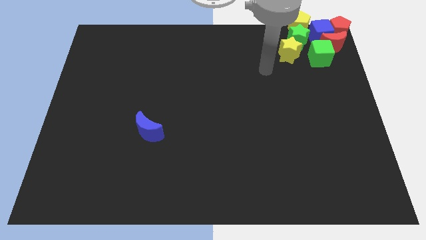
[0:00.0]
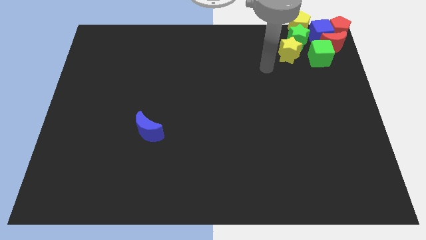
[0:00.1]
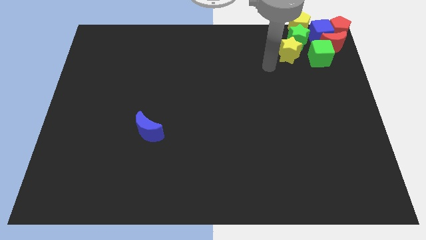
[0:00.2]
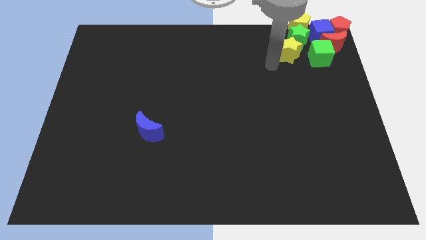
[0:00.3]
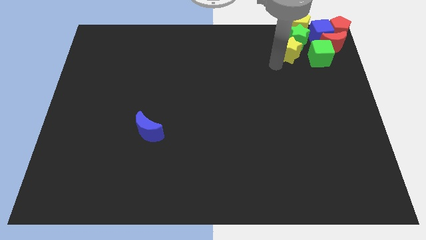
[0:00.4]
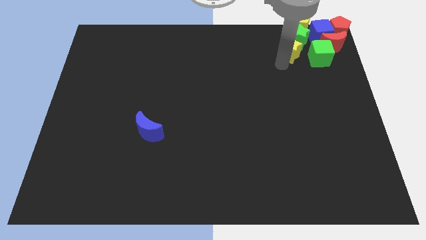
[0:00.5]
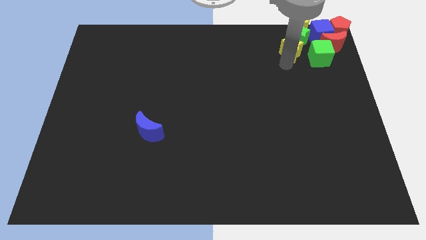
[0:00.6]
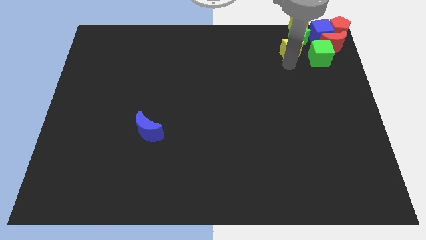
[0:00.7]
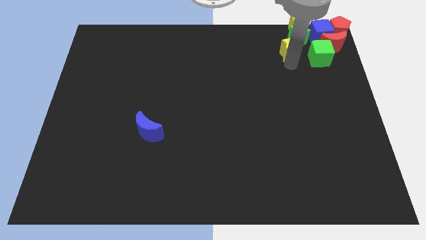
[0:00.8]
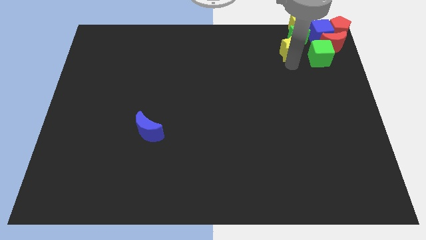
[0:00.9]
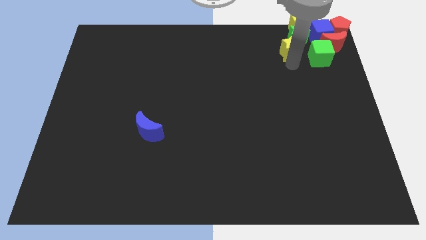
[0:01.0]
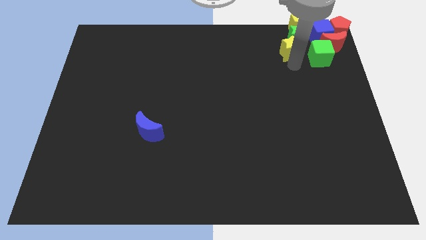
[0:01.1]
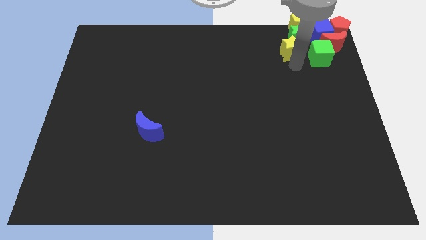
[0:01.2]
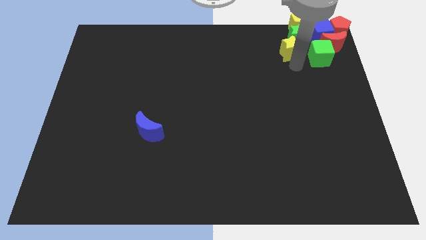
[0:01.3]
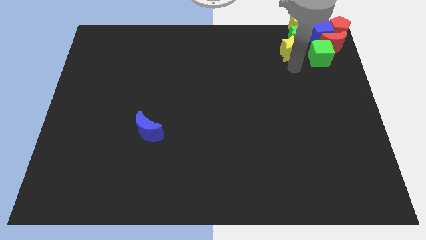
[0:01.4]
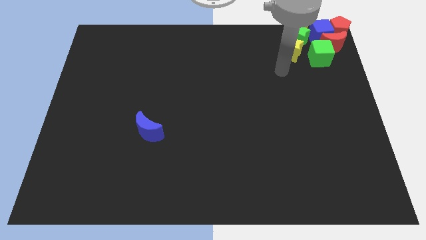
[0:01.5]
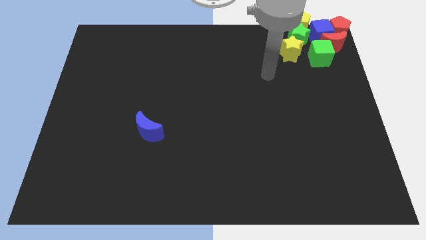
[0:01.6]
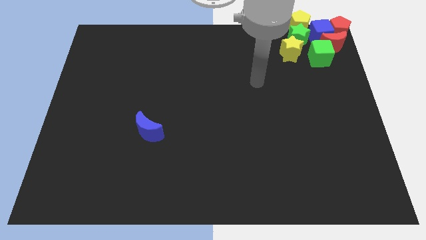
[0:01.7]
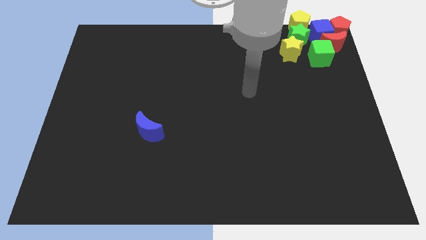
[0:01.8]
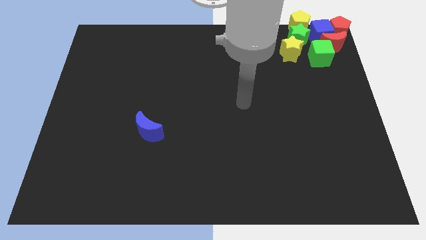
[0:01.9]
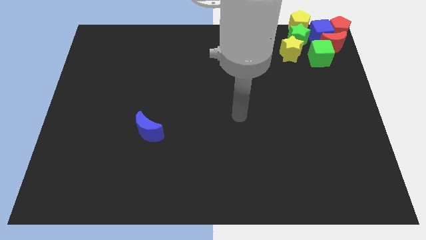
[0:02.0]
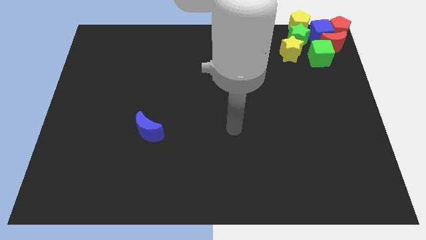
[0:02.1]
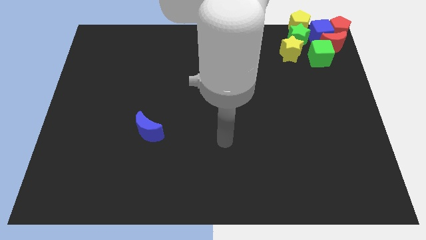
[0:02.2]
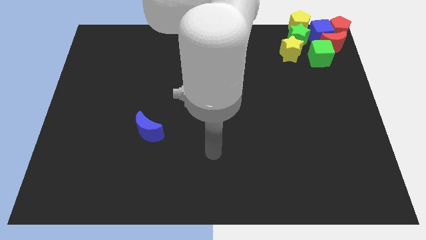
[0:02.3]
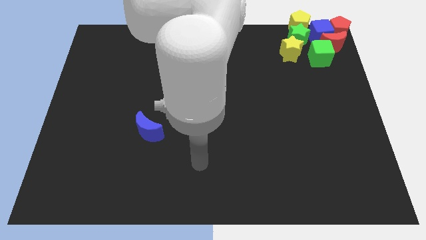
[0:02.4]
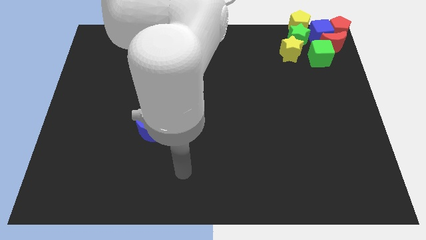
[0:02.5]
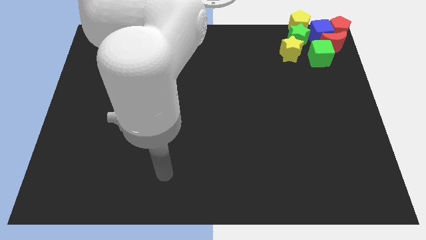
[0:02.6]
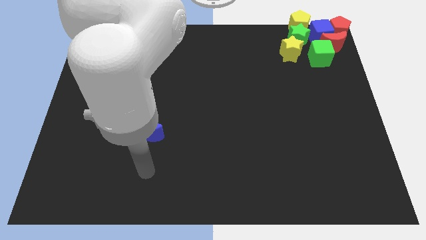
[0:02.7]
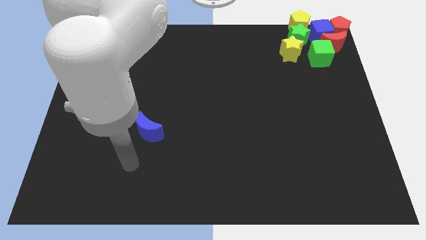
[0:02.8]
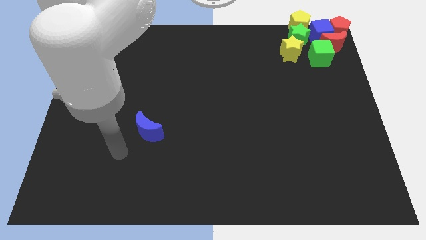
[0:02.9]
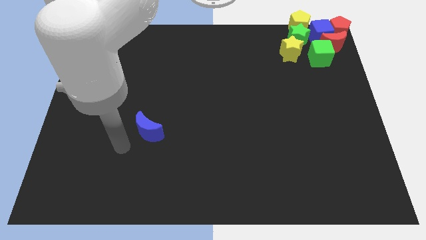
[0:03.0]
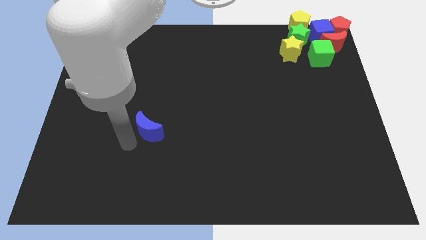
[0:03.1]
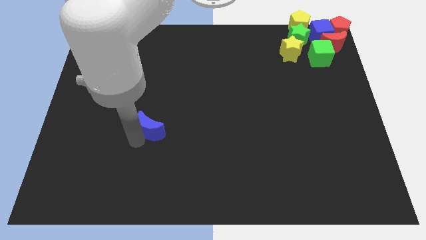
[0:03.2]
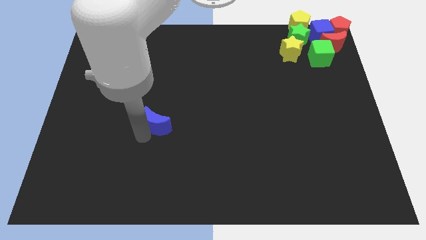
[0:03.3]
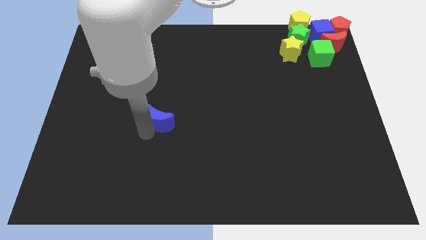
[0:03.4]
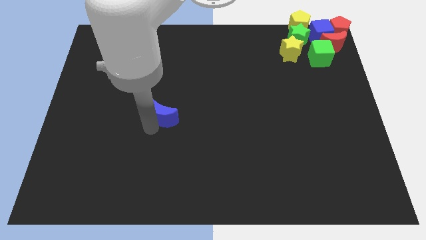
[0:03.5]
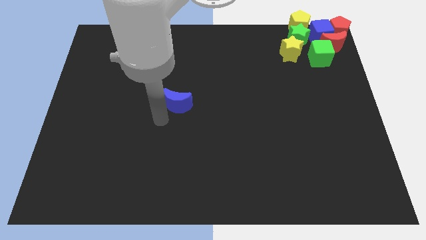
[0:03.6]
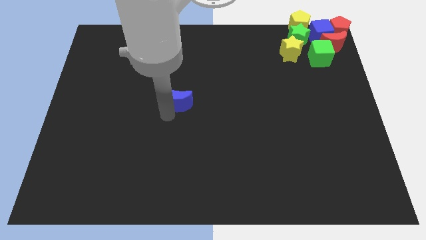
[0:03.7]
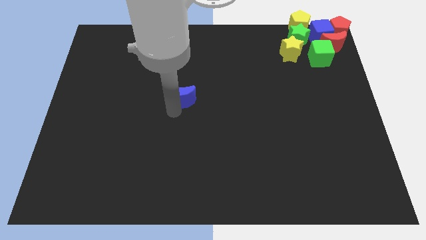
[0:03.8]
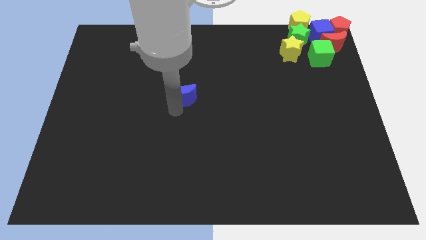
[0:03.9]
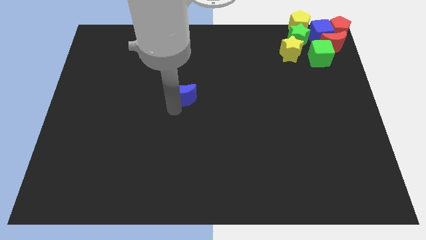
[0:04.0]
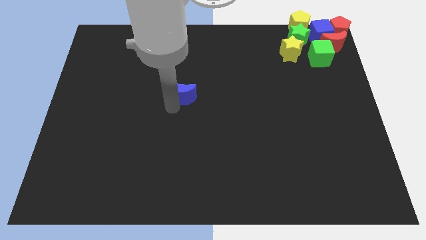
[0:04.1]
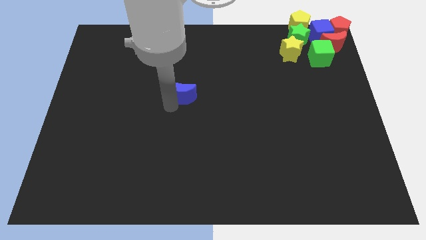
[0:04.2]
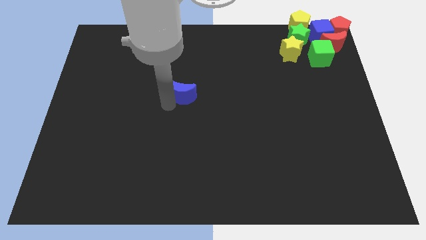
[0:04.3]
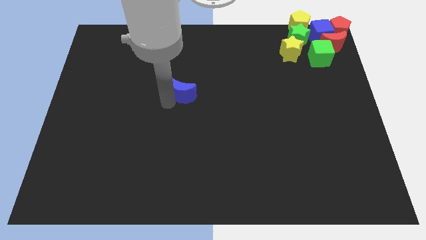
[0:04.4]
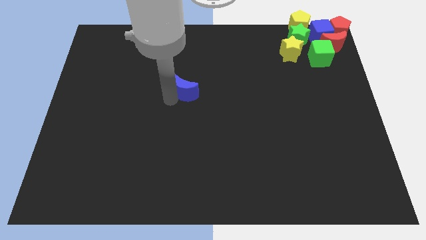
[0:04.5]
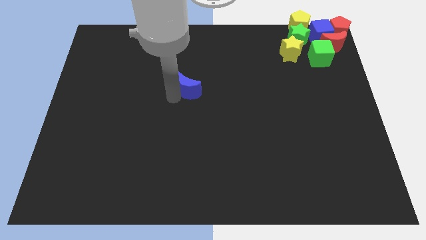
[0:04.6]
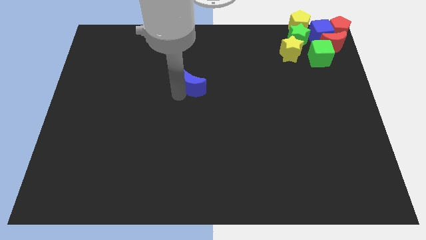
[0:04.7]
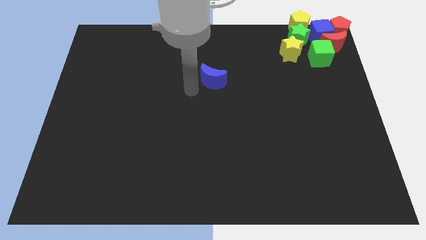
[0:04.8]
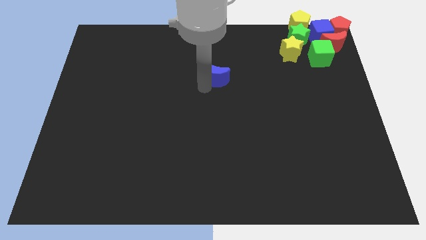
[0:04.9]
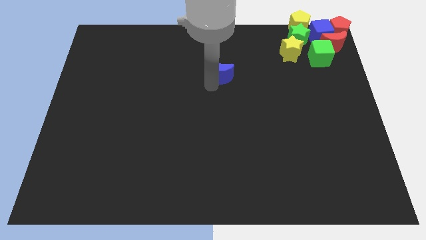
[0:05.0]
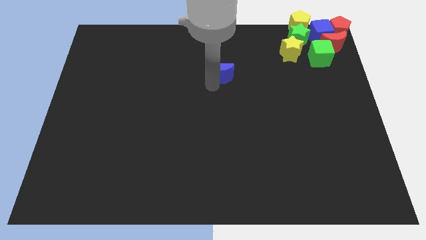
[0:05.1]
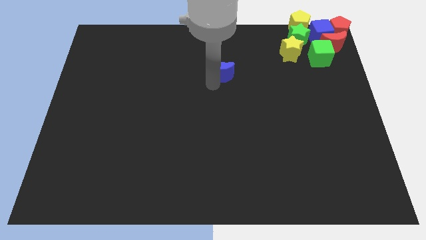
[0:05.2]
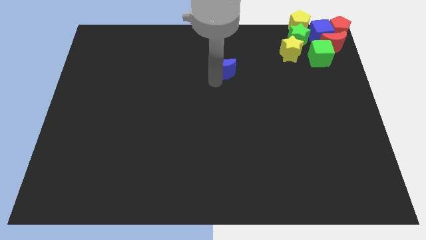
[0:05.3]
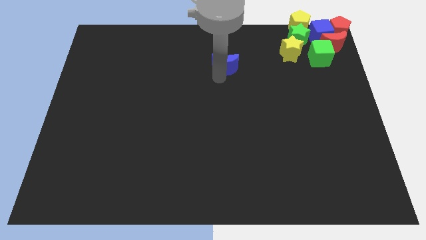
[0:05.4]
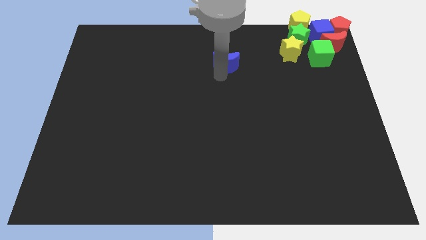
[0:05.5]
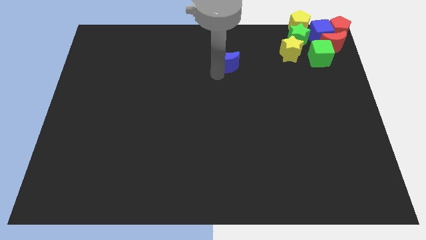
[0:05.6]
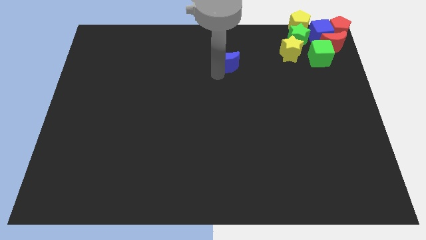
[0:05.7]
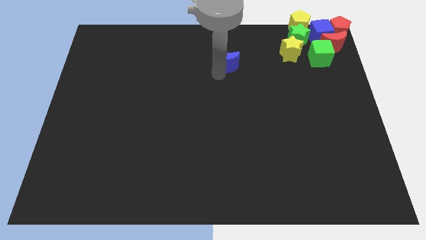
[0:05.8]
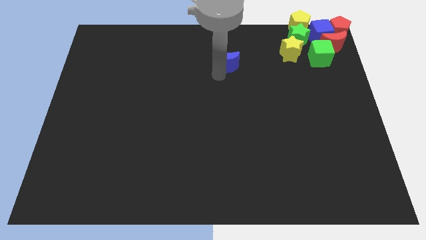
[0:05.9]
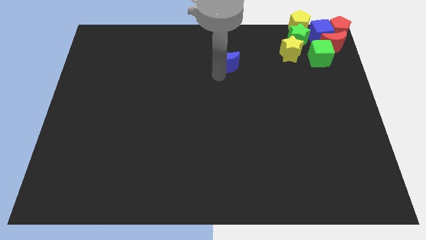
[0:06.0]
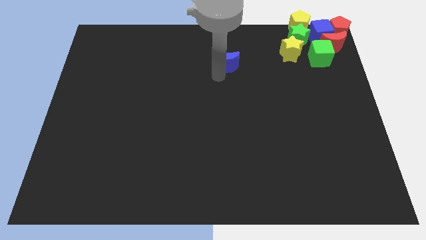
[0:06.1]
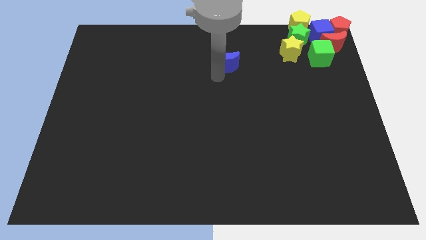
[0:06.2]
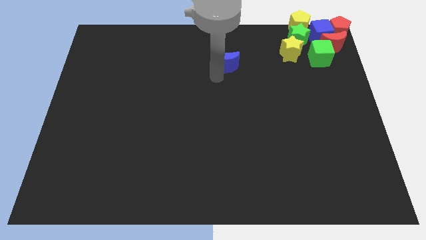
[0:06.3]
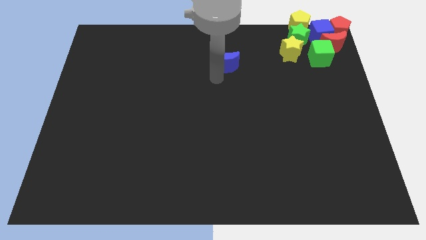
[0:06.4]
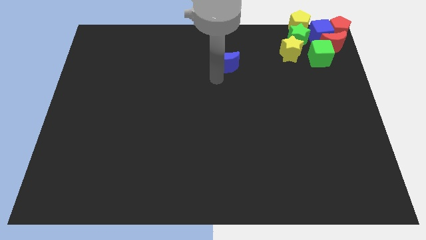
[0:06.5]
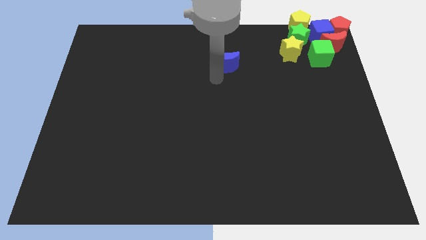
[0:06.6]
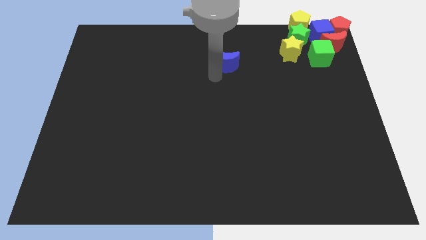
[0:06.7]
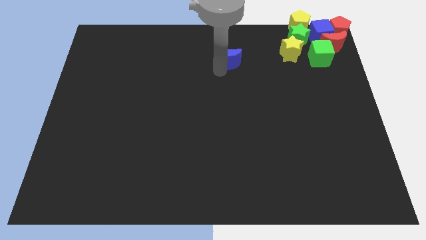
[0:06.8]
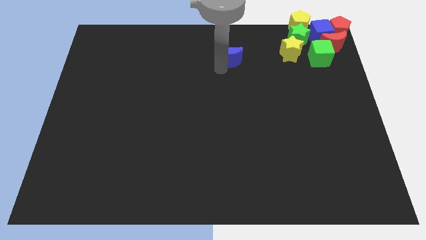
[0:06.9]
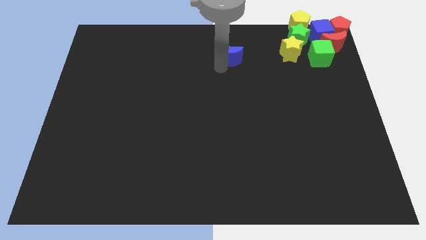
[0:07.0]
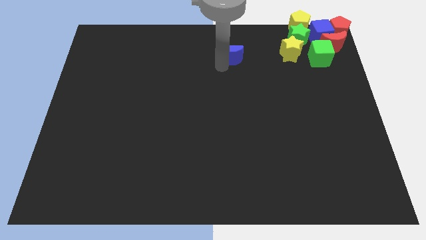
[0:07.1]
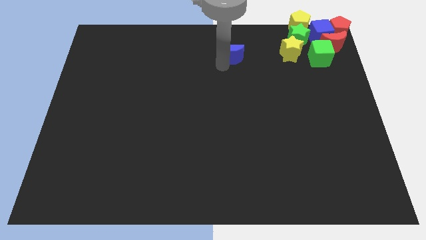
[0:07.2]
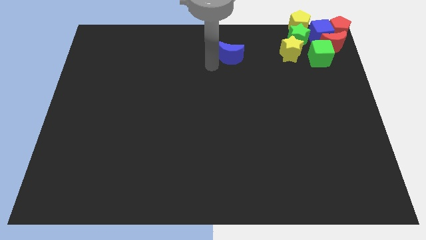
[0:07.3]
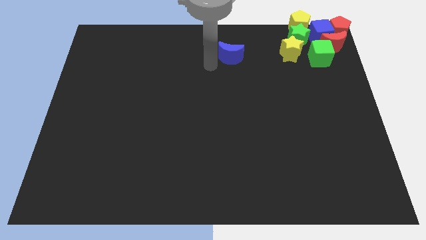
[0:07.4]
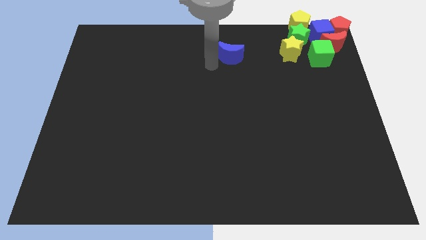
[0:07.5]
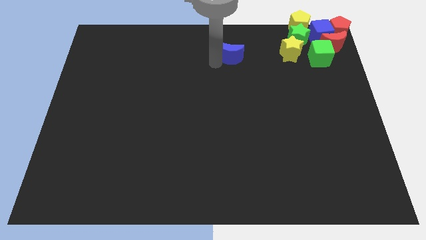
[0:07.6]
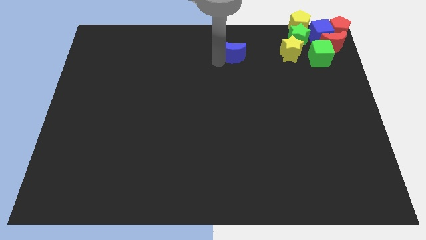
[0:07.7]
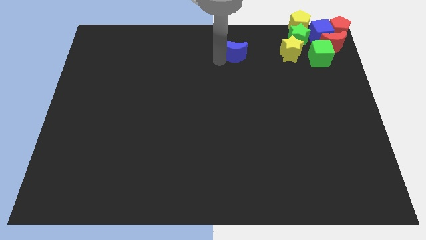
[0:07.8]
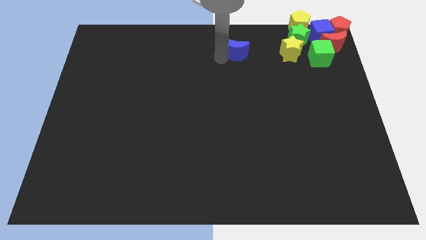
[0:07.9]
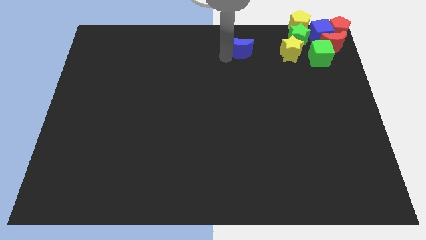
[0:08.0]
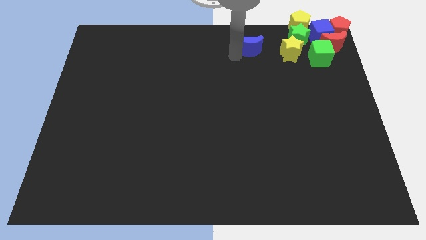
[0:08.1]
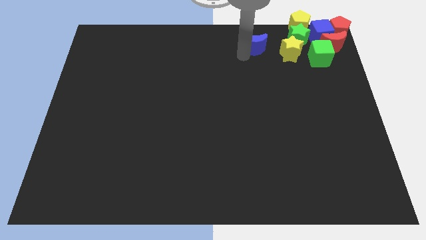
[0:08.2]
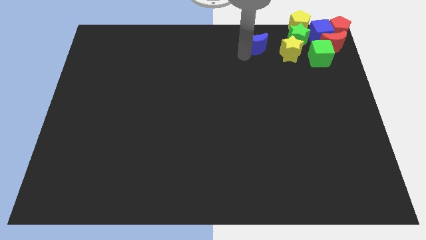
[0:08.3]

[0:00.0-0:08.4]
place the blue crescent to the lft of the yellow star

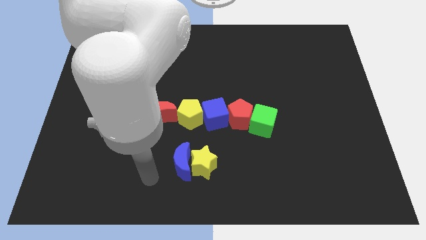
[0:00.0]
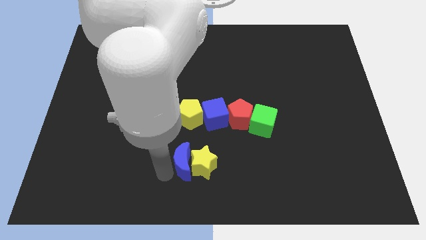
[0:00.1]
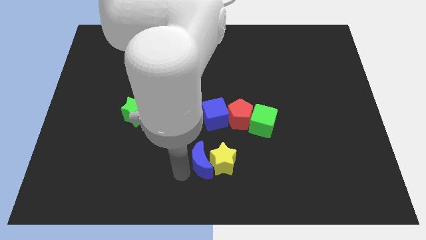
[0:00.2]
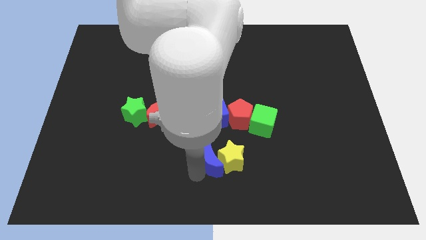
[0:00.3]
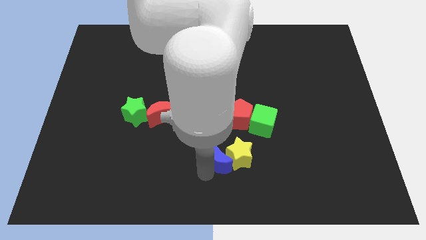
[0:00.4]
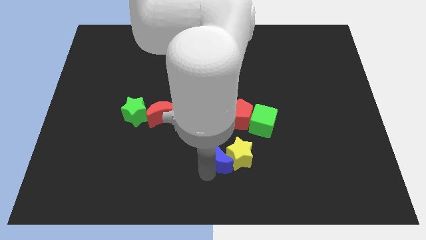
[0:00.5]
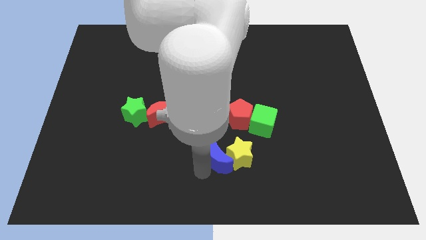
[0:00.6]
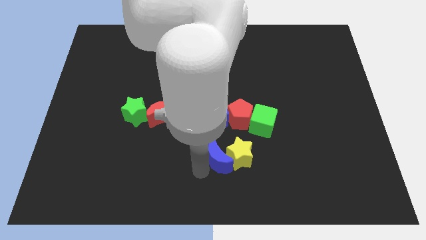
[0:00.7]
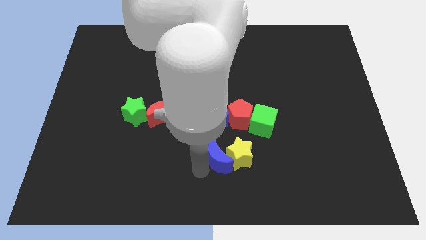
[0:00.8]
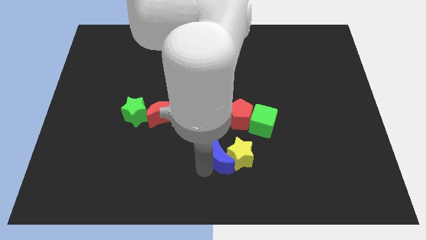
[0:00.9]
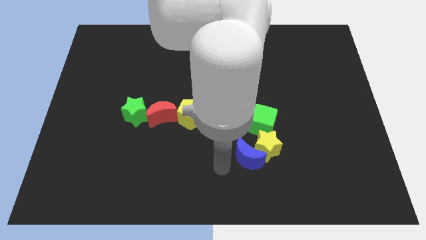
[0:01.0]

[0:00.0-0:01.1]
move the blue crescent to the left of the yellow star
